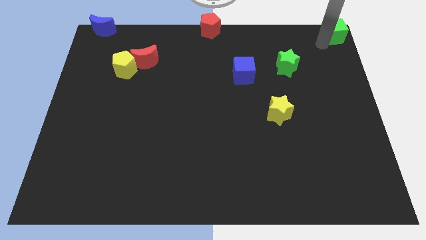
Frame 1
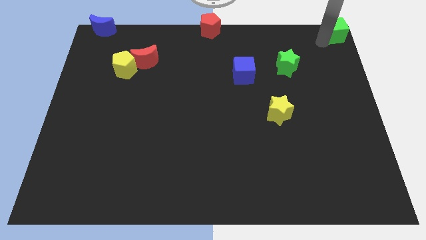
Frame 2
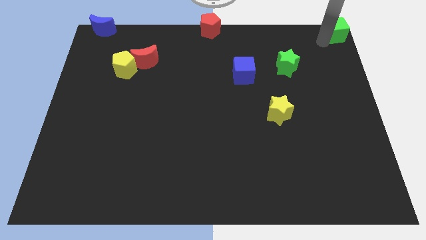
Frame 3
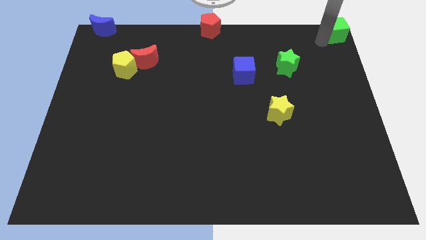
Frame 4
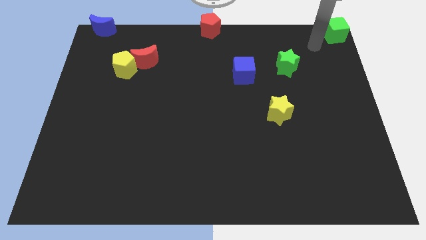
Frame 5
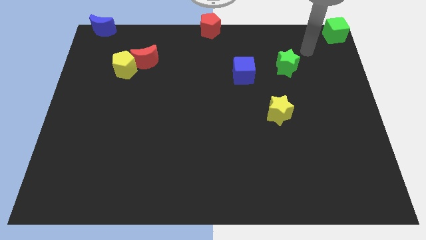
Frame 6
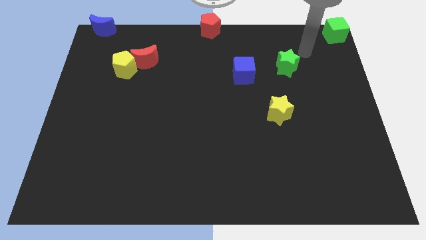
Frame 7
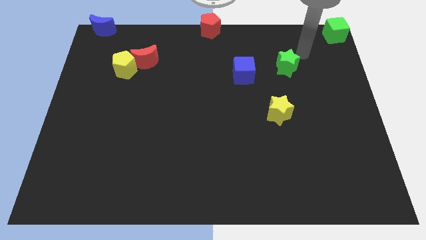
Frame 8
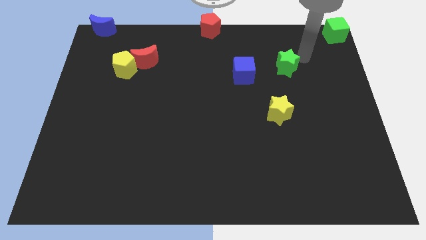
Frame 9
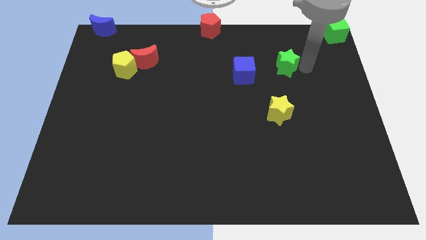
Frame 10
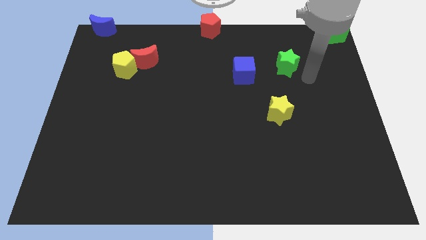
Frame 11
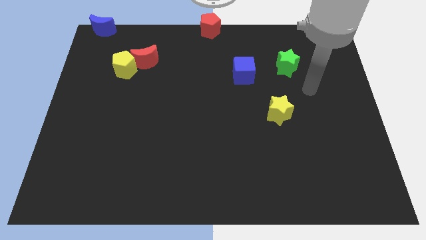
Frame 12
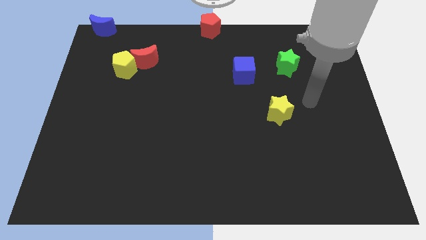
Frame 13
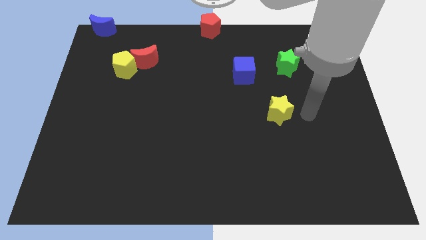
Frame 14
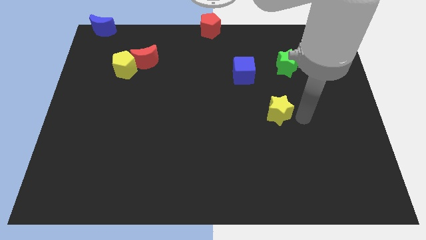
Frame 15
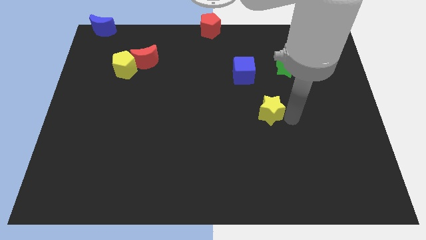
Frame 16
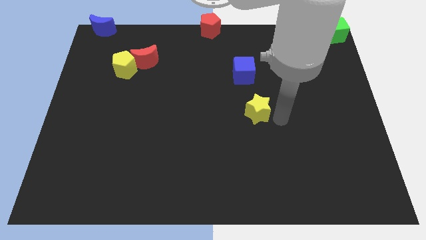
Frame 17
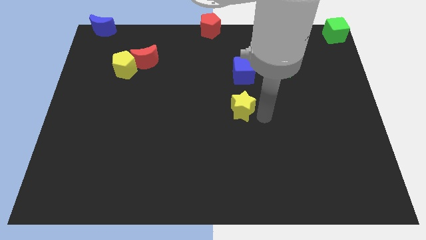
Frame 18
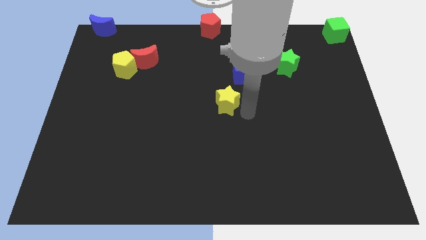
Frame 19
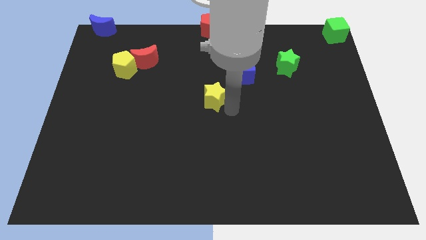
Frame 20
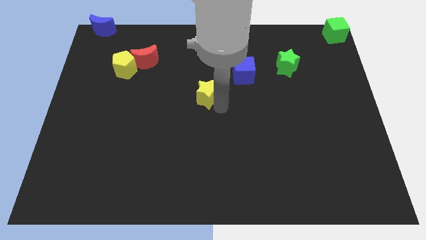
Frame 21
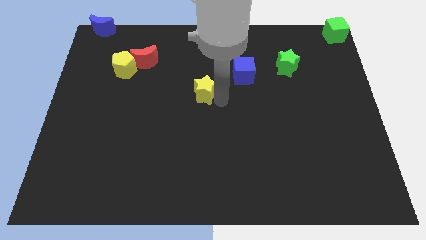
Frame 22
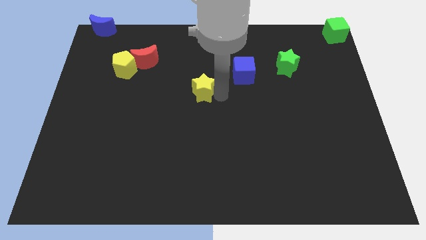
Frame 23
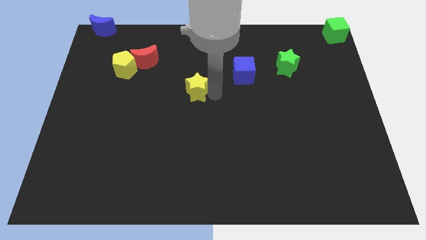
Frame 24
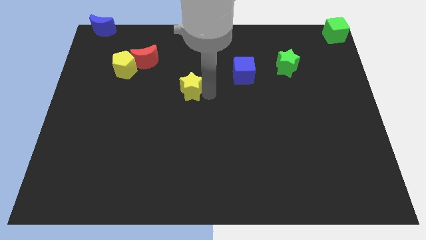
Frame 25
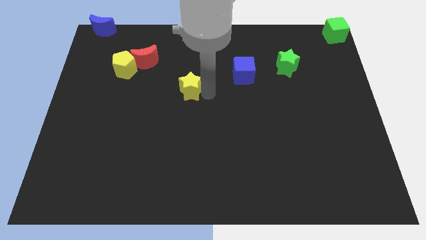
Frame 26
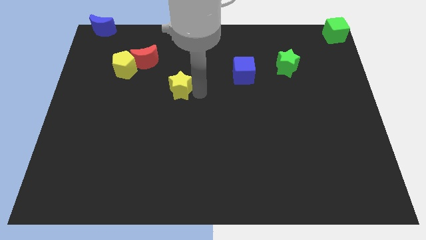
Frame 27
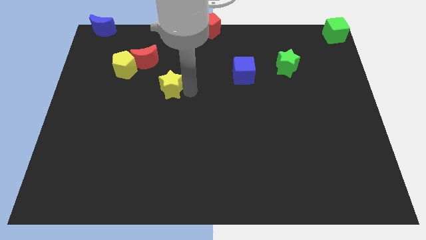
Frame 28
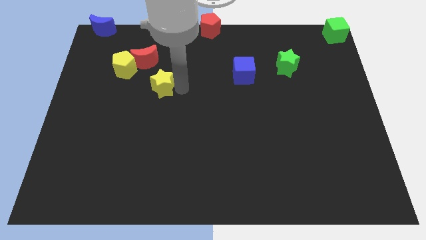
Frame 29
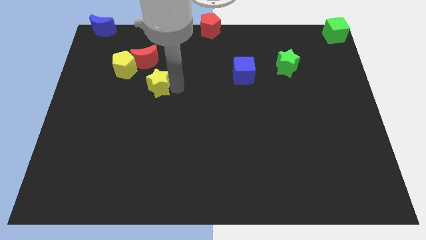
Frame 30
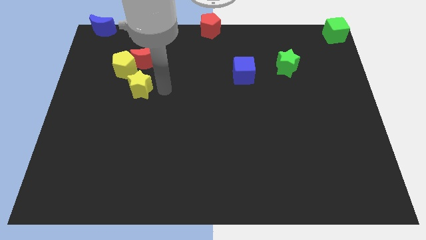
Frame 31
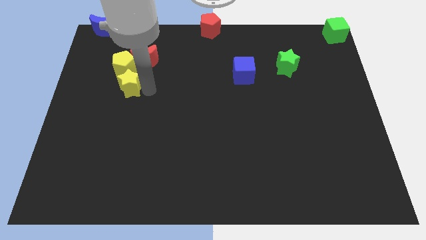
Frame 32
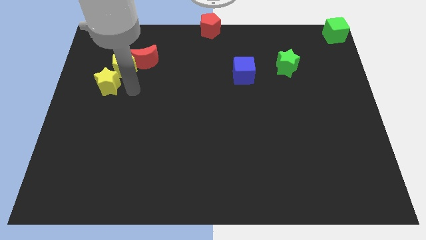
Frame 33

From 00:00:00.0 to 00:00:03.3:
move the yellow star vertically below the yellow pentagon

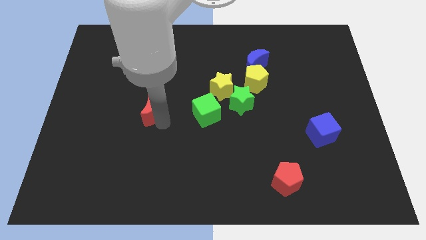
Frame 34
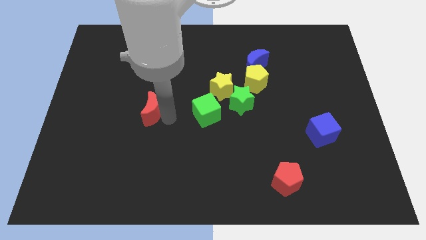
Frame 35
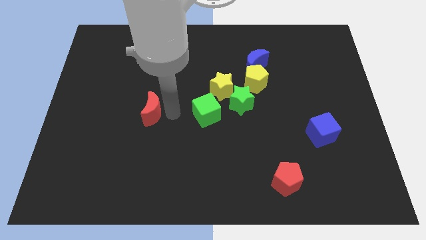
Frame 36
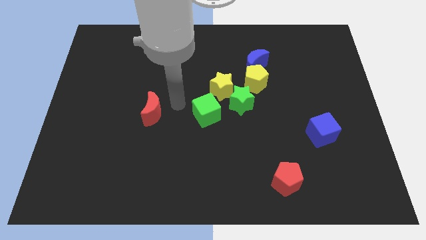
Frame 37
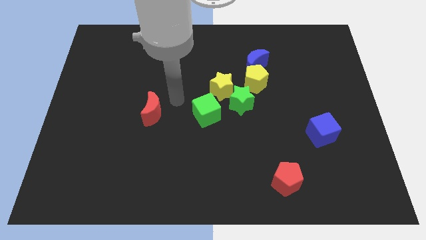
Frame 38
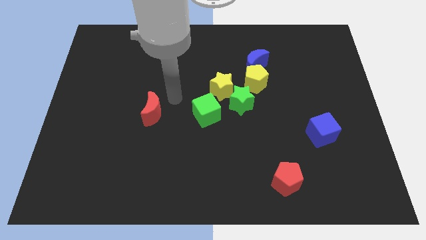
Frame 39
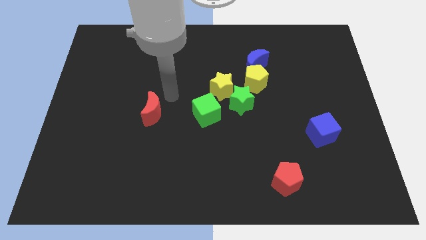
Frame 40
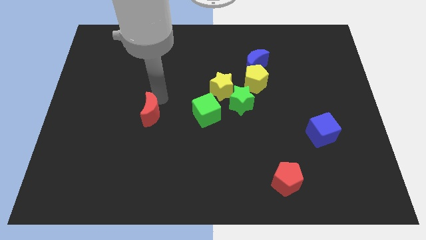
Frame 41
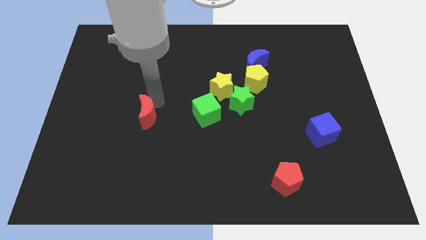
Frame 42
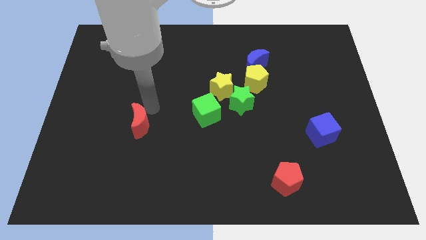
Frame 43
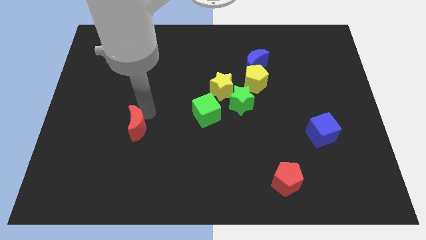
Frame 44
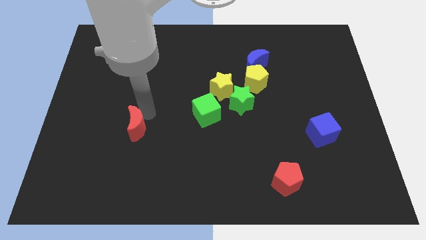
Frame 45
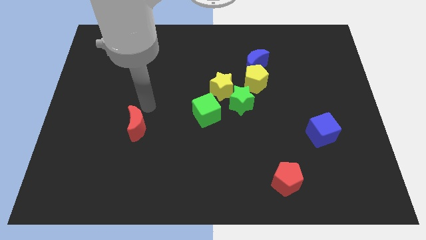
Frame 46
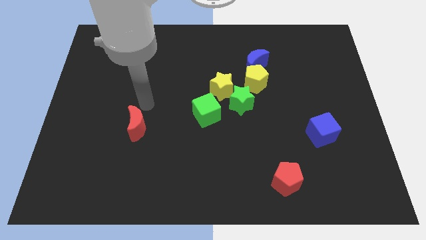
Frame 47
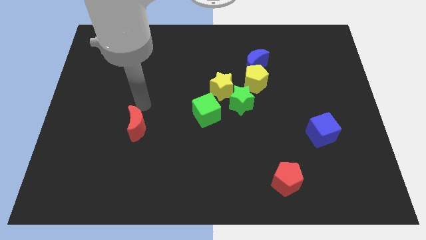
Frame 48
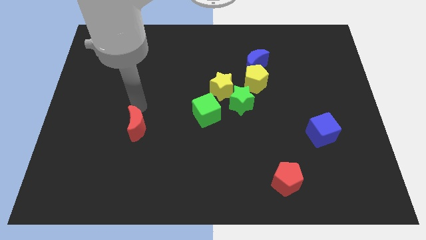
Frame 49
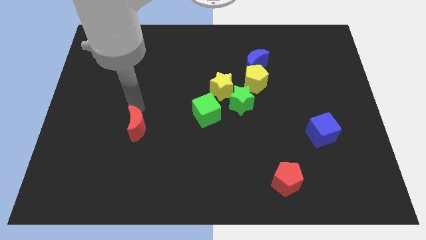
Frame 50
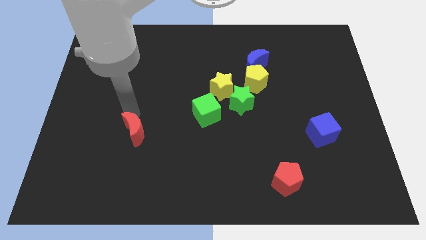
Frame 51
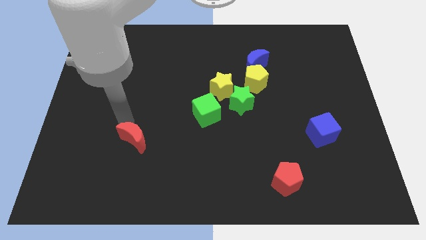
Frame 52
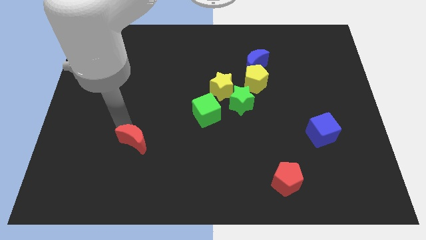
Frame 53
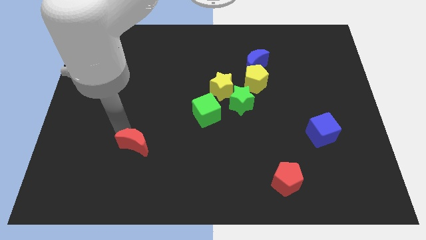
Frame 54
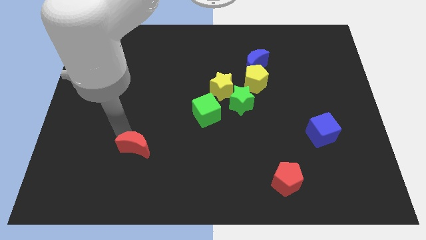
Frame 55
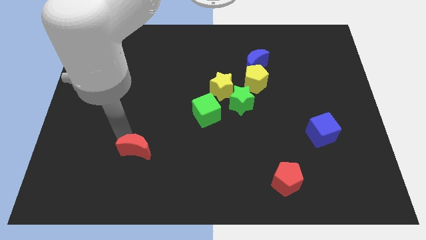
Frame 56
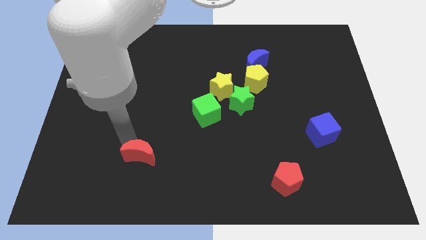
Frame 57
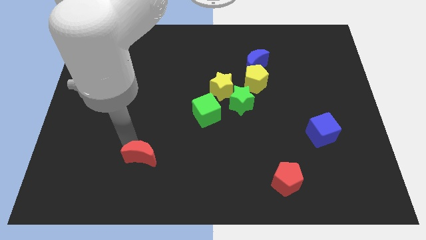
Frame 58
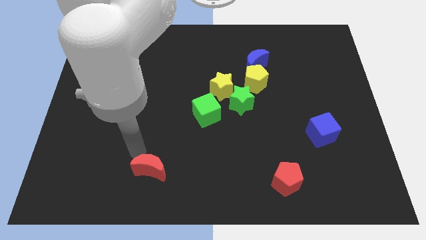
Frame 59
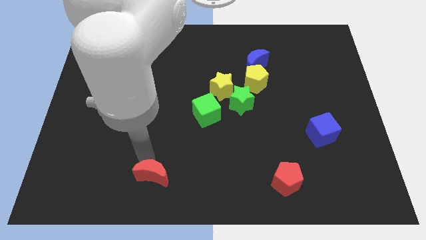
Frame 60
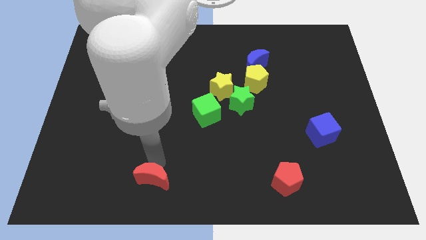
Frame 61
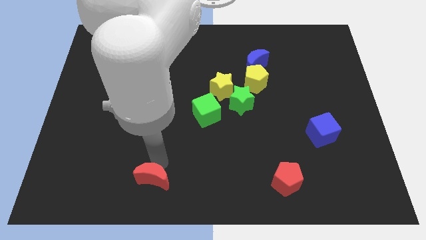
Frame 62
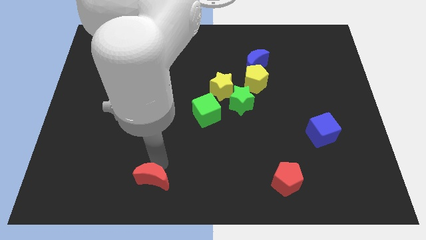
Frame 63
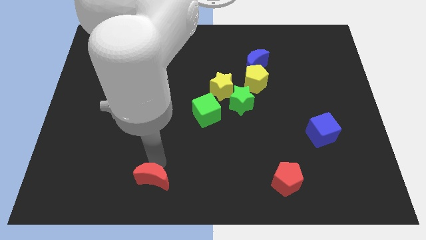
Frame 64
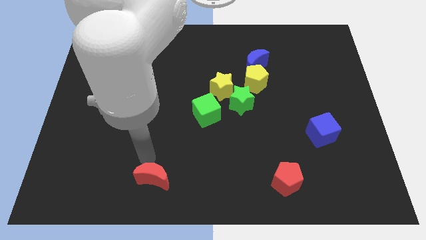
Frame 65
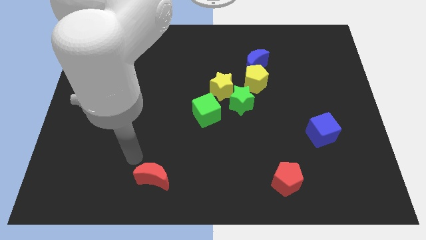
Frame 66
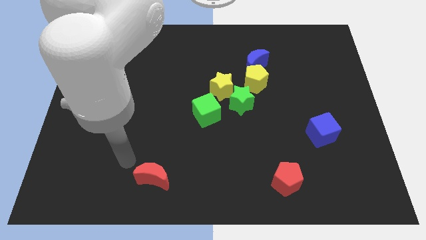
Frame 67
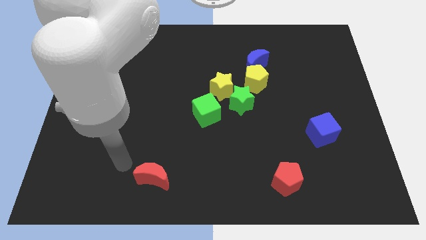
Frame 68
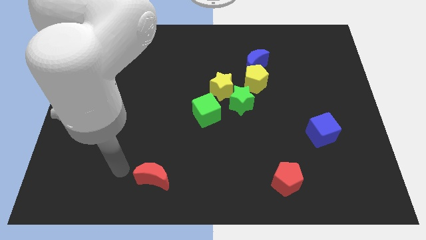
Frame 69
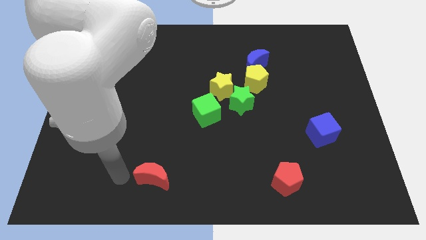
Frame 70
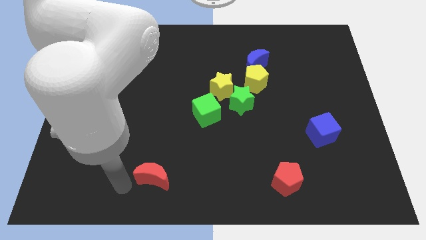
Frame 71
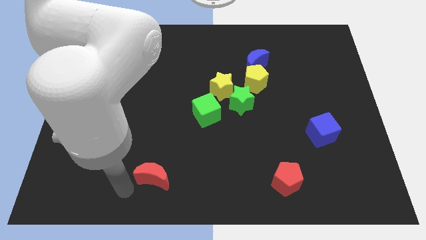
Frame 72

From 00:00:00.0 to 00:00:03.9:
place the red moon left to the red pentagon

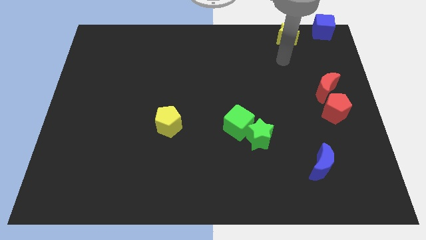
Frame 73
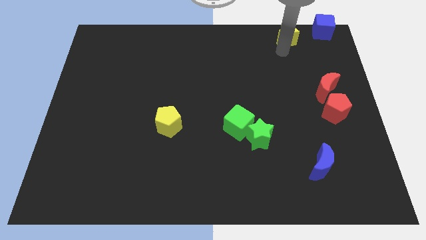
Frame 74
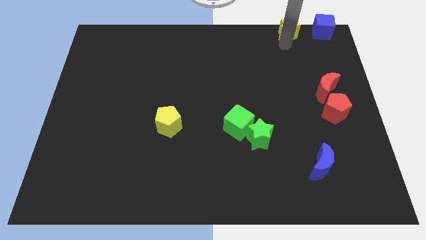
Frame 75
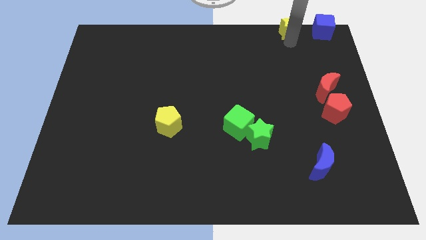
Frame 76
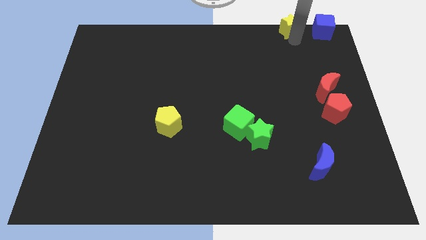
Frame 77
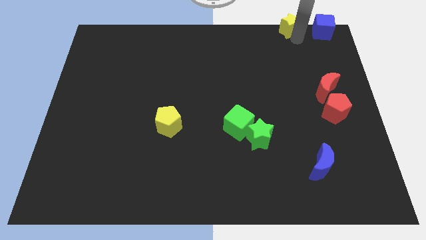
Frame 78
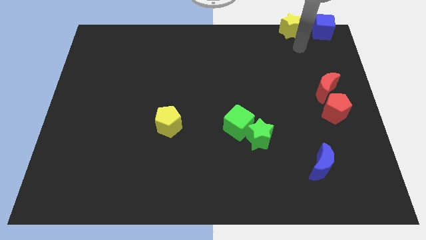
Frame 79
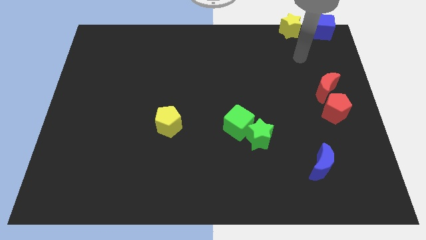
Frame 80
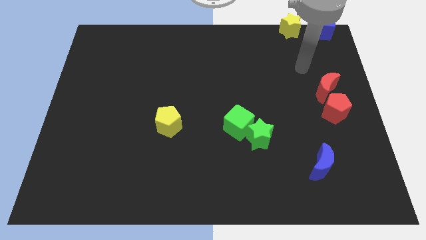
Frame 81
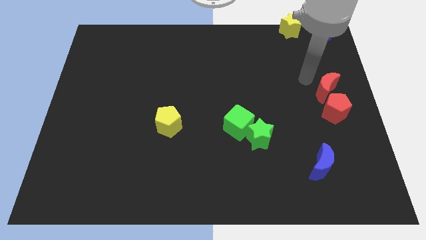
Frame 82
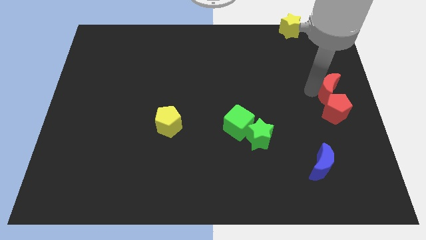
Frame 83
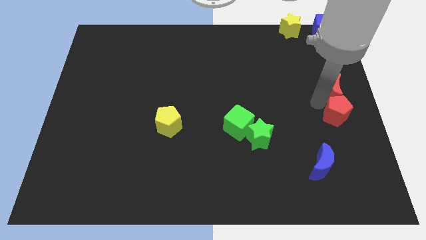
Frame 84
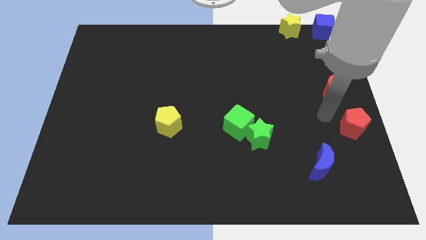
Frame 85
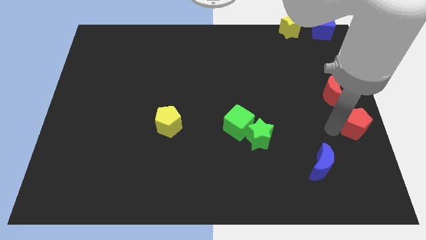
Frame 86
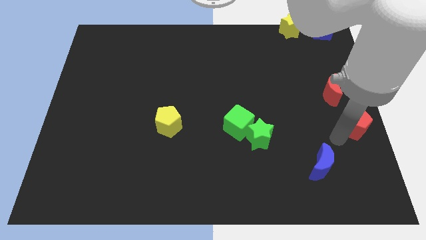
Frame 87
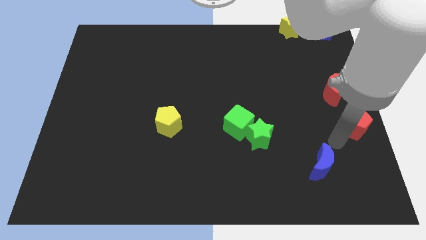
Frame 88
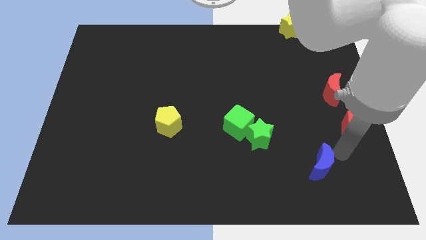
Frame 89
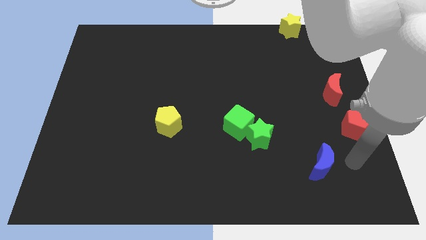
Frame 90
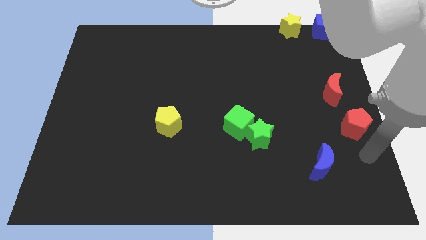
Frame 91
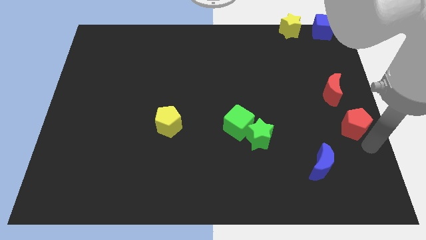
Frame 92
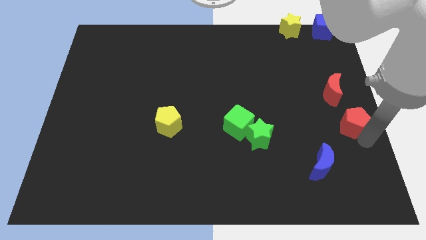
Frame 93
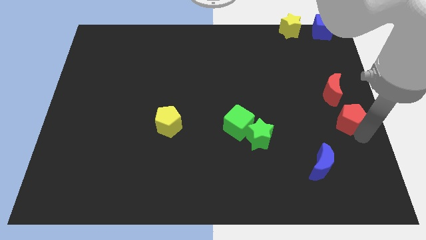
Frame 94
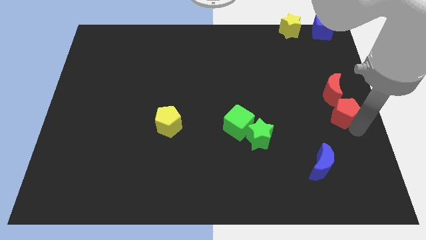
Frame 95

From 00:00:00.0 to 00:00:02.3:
slightly move the red moon and red pentagon towards right
